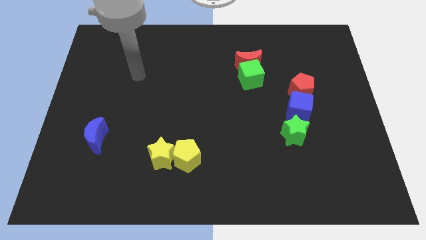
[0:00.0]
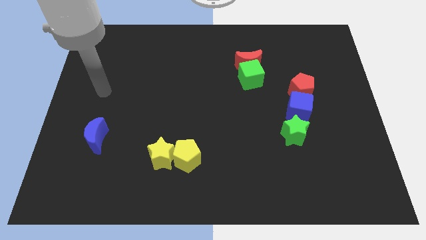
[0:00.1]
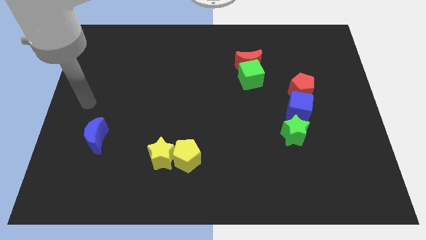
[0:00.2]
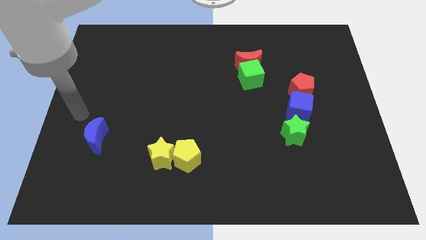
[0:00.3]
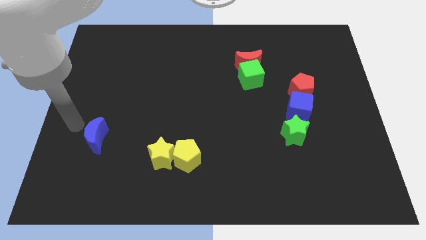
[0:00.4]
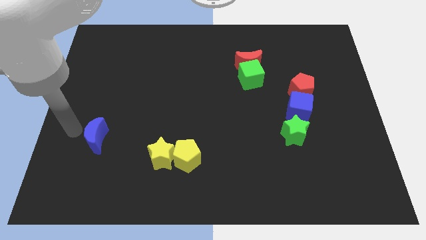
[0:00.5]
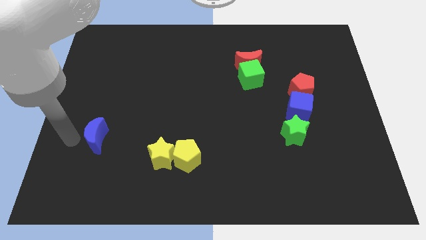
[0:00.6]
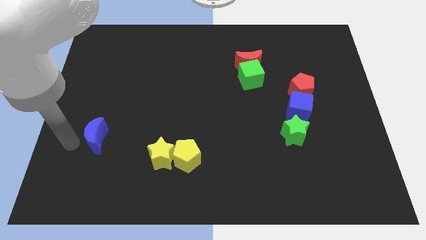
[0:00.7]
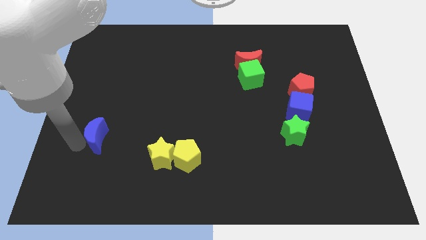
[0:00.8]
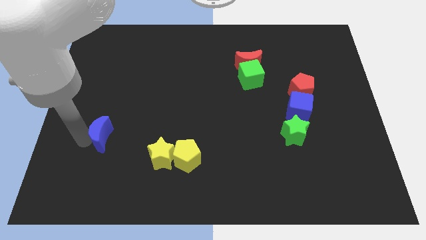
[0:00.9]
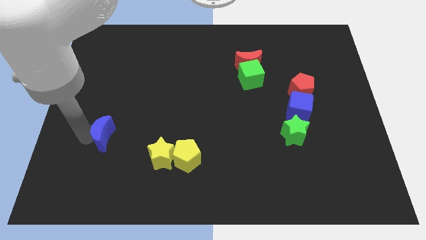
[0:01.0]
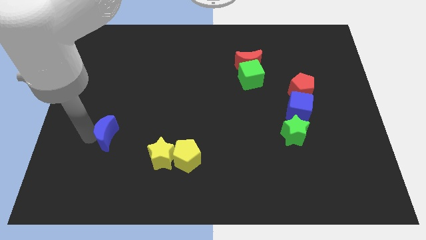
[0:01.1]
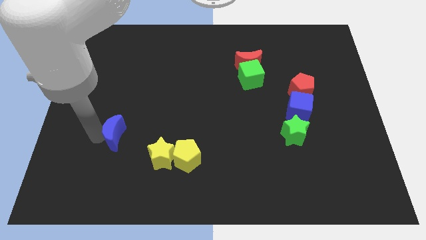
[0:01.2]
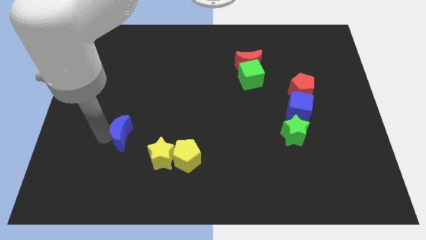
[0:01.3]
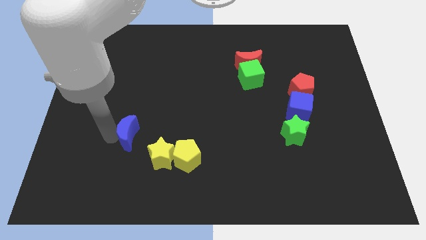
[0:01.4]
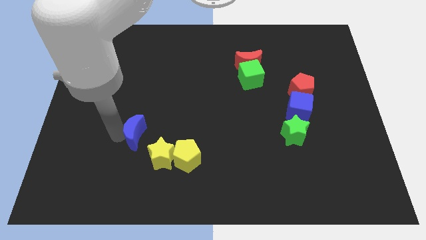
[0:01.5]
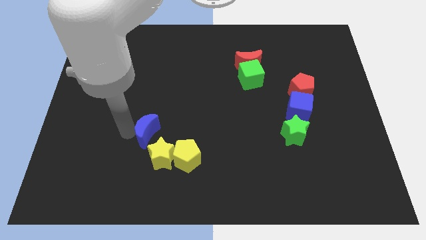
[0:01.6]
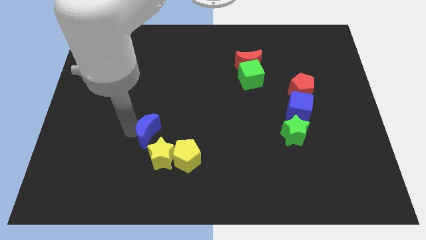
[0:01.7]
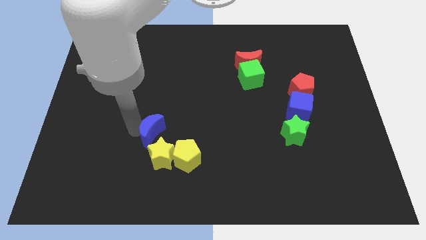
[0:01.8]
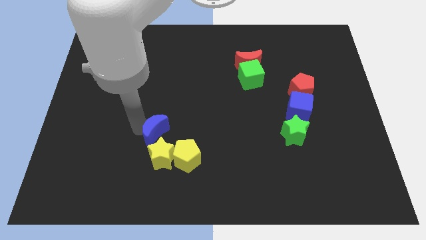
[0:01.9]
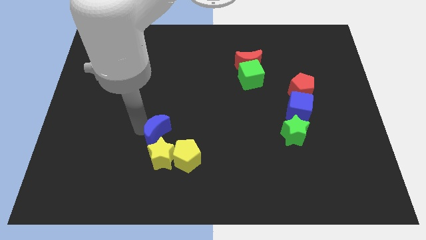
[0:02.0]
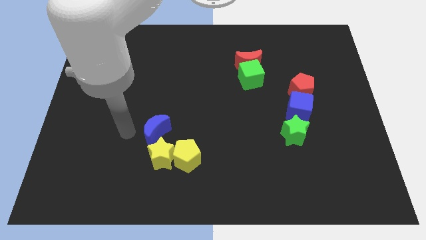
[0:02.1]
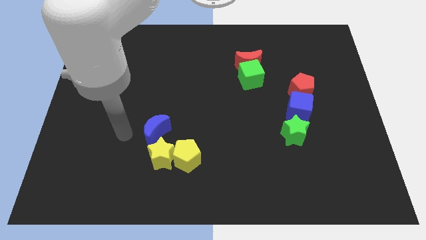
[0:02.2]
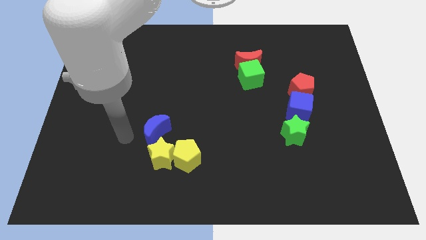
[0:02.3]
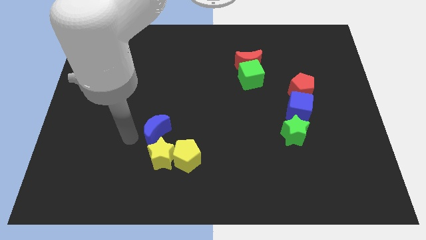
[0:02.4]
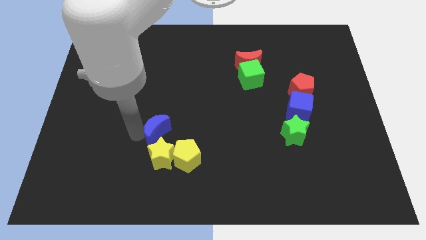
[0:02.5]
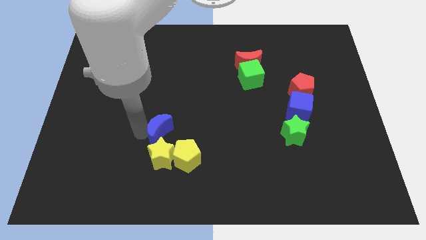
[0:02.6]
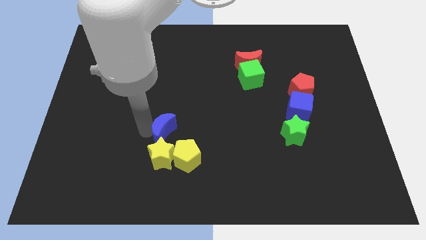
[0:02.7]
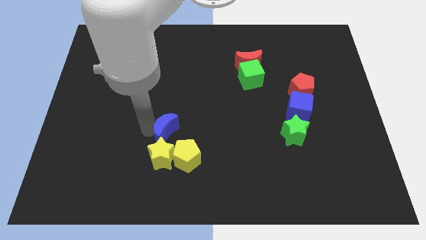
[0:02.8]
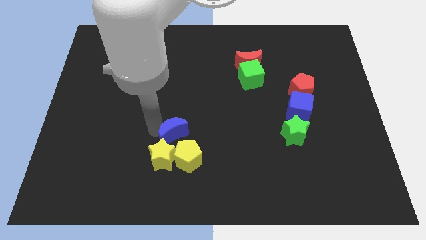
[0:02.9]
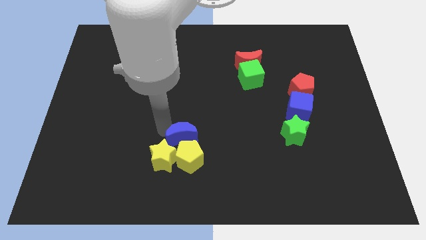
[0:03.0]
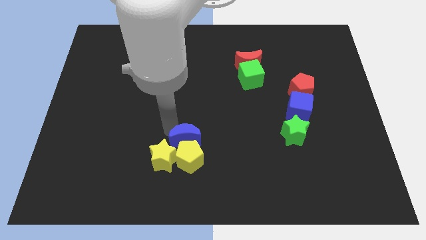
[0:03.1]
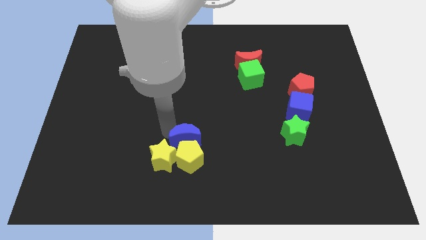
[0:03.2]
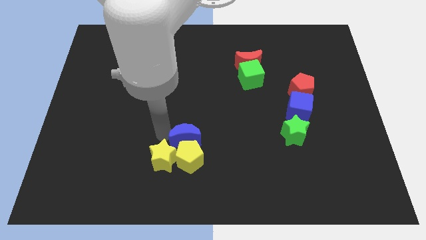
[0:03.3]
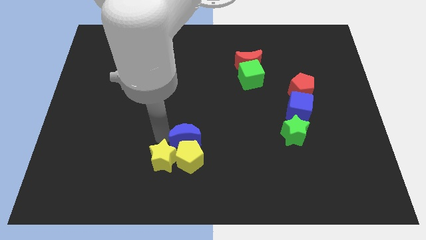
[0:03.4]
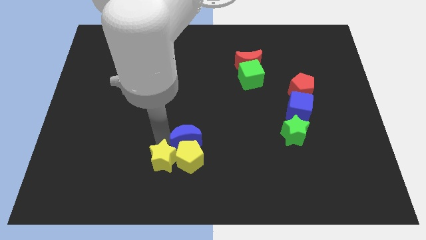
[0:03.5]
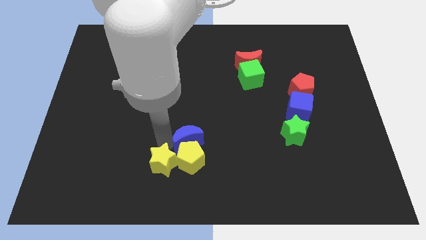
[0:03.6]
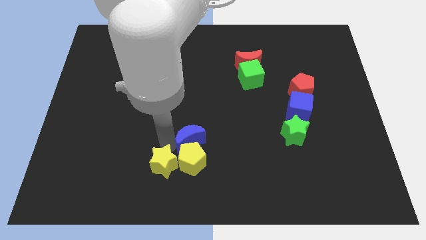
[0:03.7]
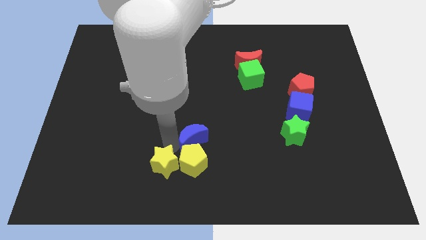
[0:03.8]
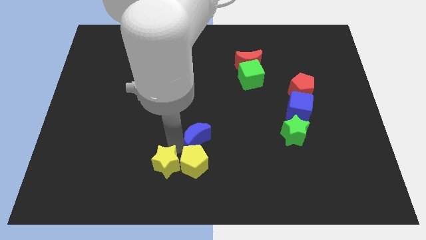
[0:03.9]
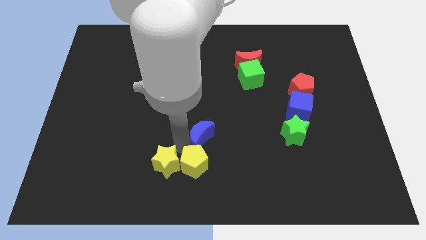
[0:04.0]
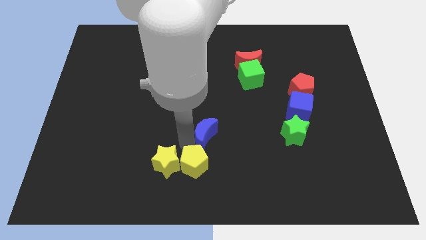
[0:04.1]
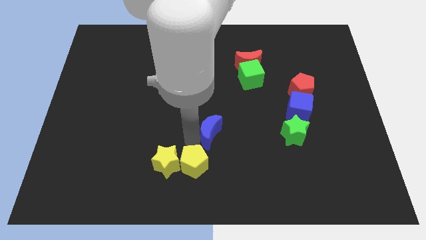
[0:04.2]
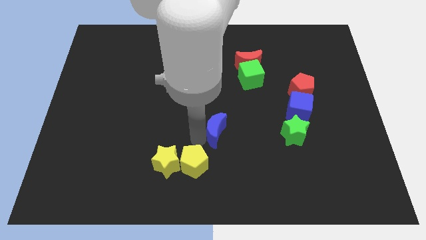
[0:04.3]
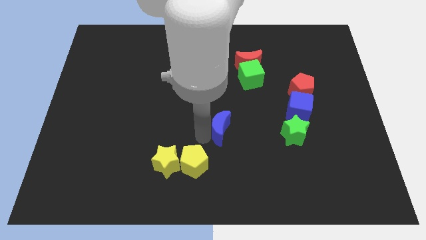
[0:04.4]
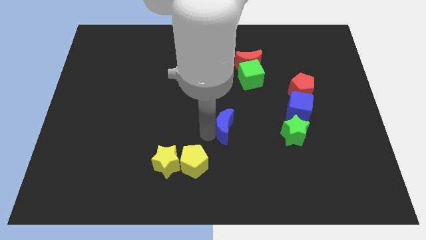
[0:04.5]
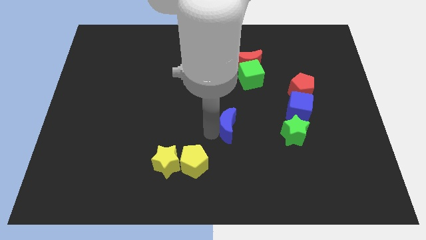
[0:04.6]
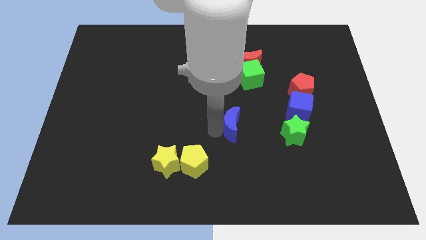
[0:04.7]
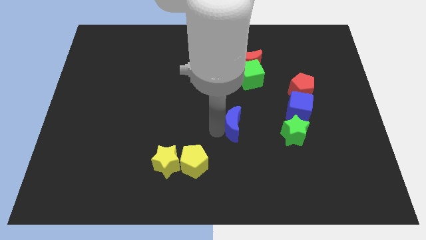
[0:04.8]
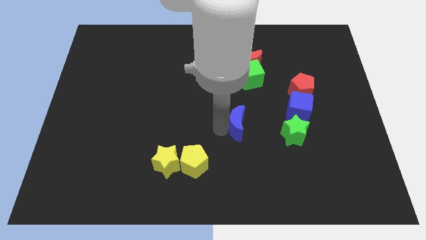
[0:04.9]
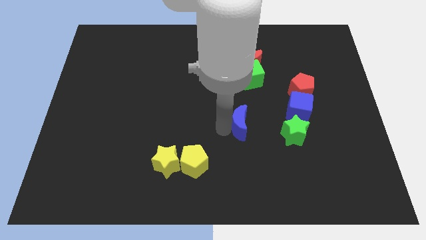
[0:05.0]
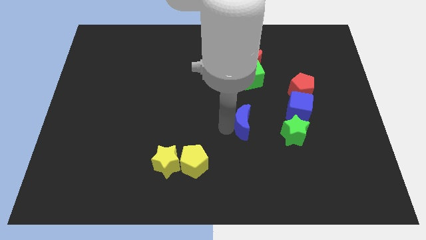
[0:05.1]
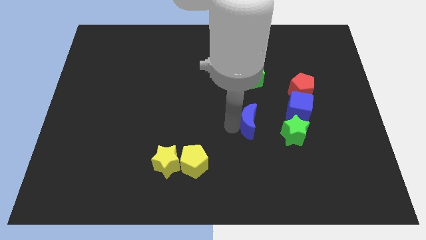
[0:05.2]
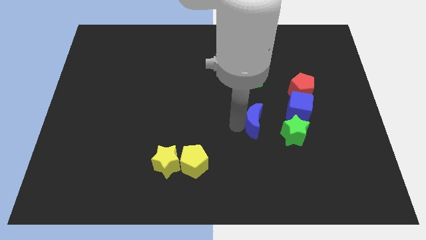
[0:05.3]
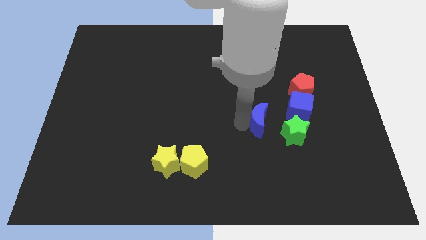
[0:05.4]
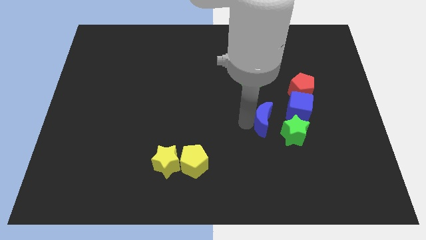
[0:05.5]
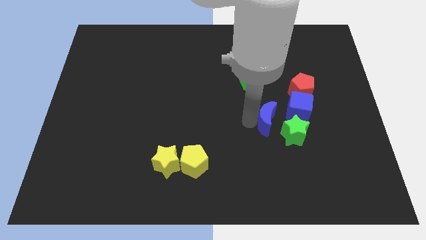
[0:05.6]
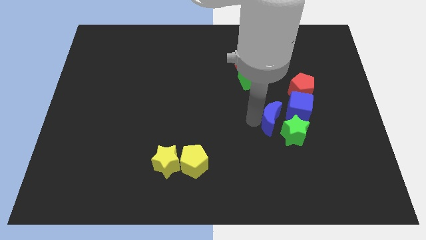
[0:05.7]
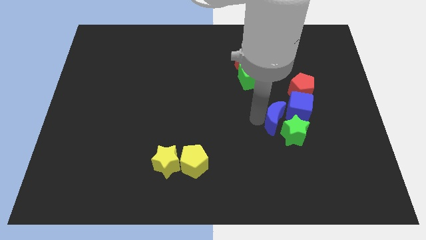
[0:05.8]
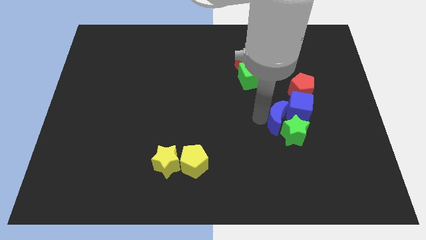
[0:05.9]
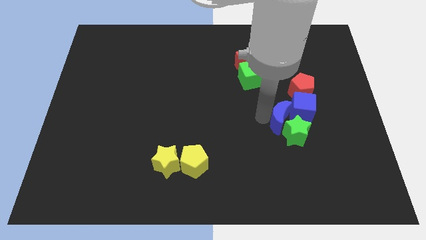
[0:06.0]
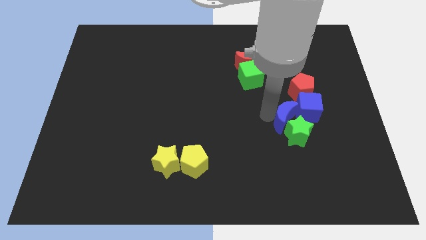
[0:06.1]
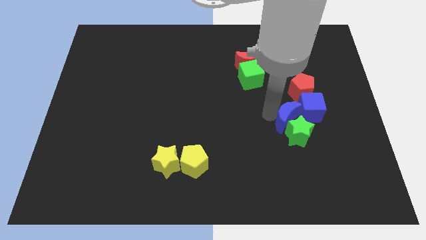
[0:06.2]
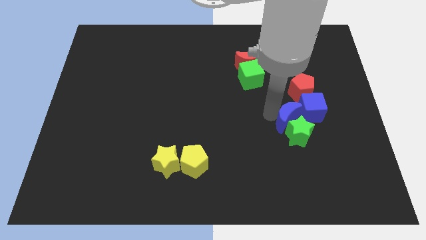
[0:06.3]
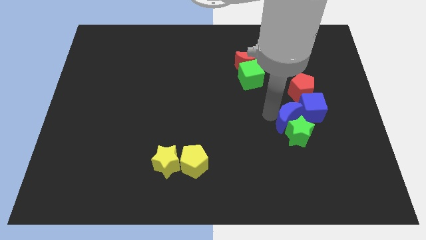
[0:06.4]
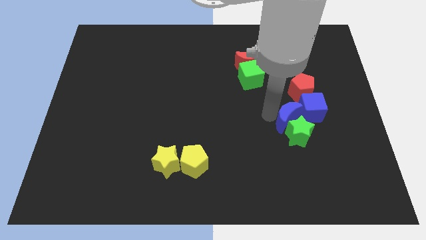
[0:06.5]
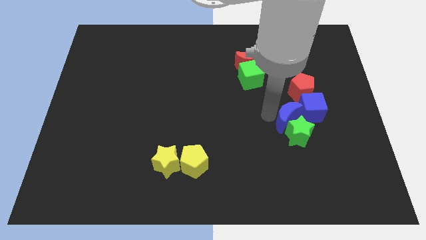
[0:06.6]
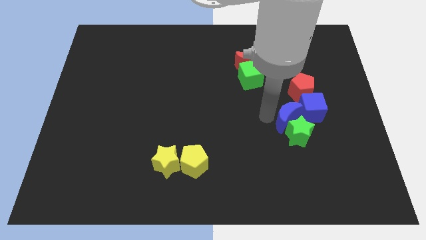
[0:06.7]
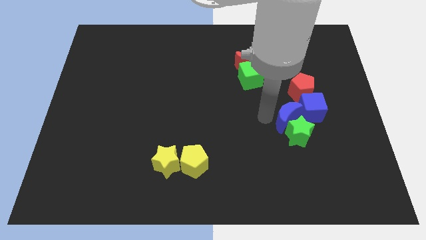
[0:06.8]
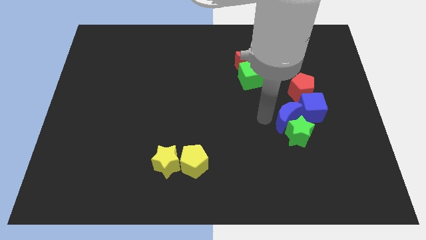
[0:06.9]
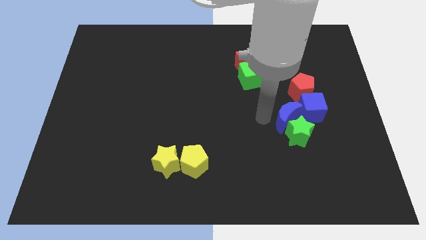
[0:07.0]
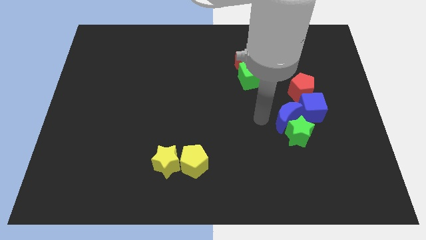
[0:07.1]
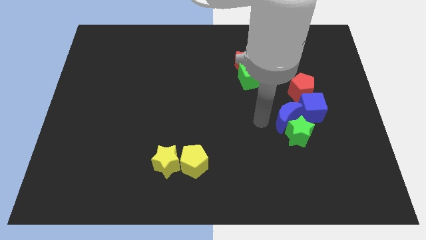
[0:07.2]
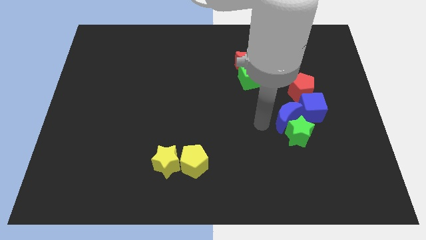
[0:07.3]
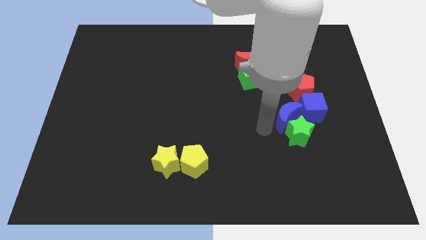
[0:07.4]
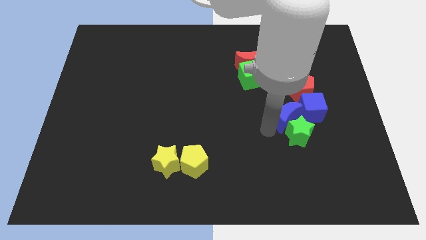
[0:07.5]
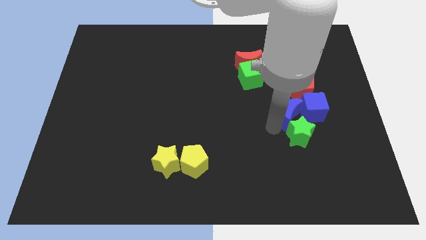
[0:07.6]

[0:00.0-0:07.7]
slide the blue moon close to the blue cube

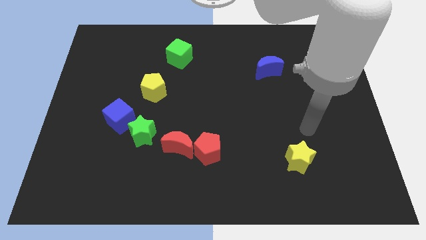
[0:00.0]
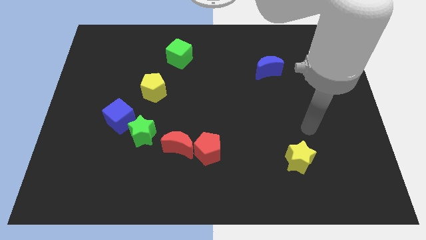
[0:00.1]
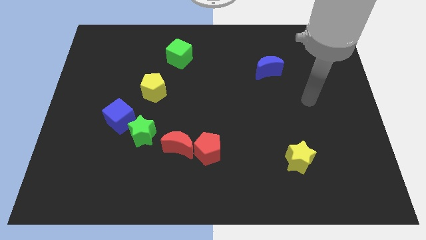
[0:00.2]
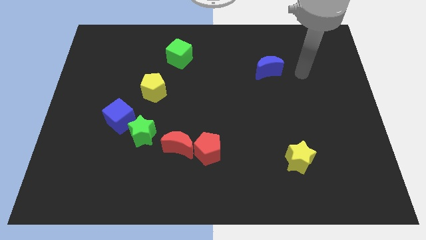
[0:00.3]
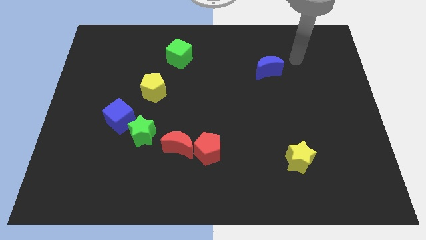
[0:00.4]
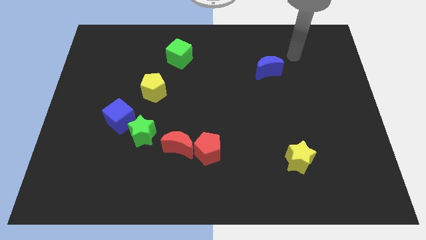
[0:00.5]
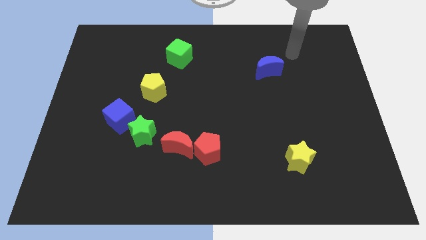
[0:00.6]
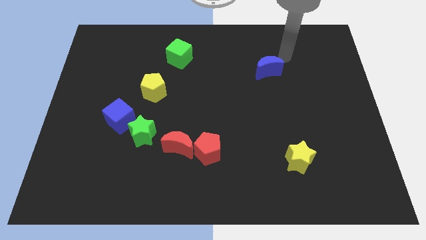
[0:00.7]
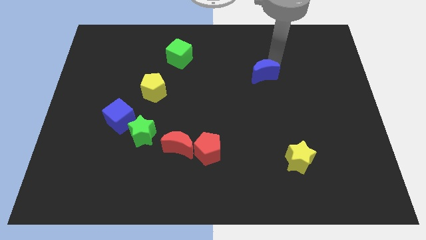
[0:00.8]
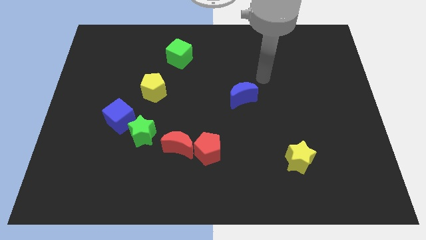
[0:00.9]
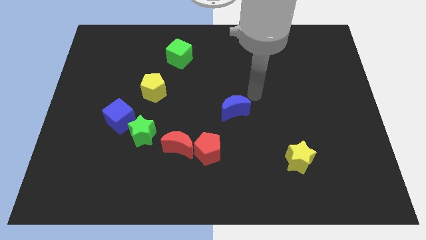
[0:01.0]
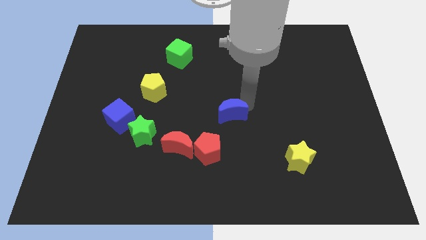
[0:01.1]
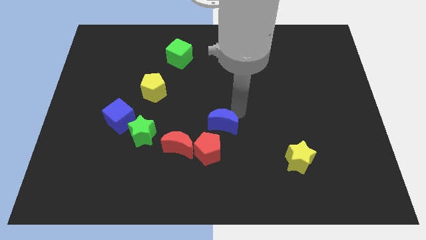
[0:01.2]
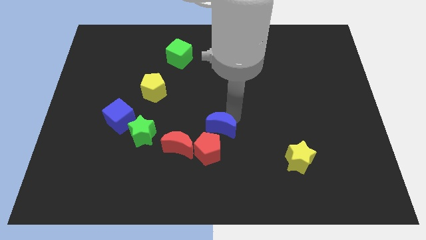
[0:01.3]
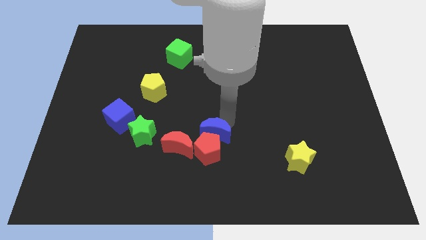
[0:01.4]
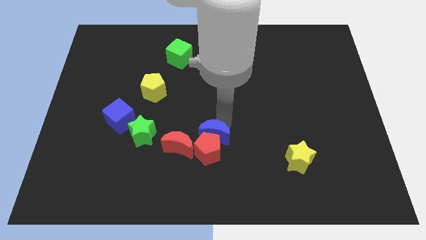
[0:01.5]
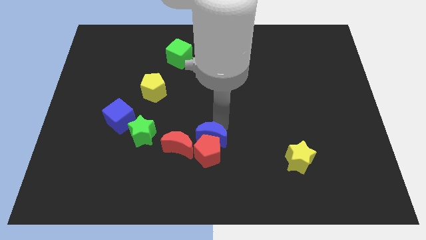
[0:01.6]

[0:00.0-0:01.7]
push the blue moon towards the red pentagon
